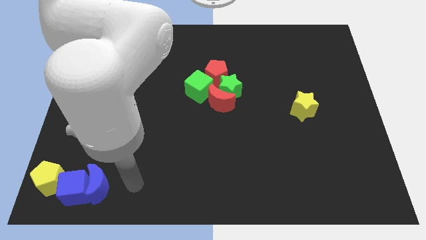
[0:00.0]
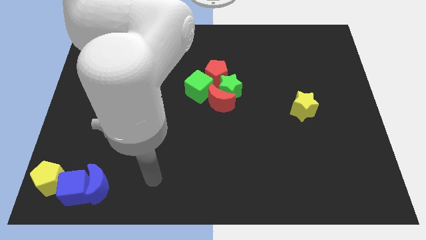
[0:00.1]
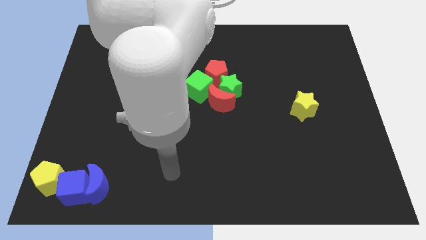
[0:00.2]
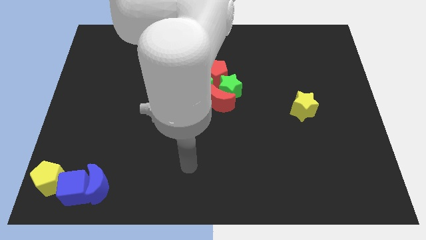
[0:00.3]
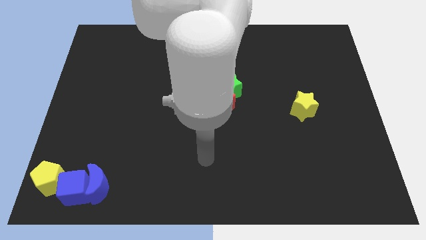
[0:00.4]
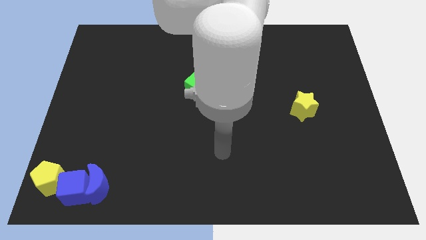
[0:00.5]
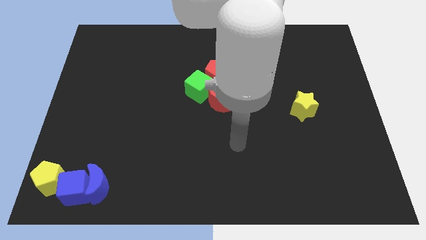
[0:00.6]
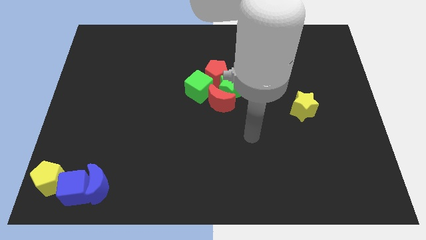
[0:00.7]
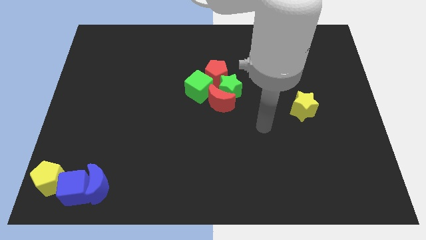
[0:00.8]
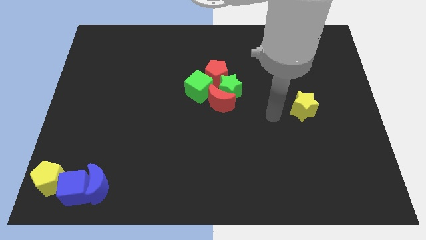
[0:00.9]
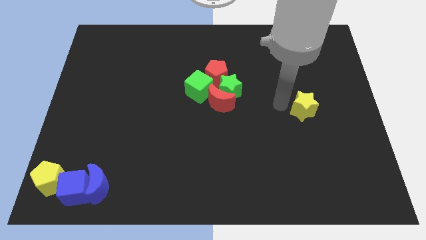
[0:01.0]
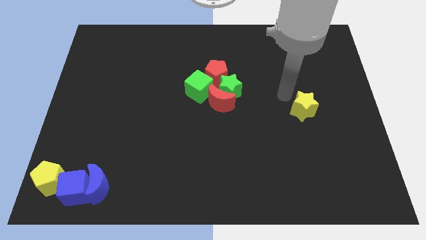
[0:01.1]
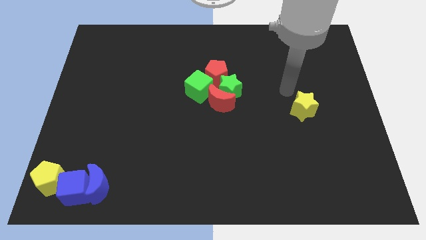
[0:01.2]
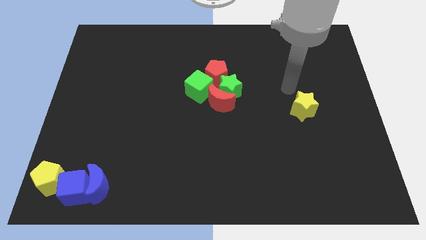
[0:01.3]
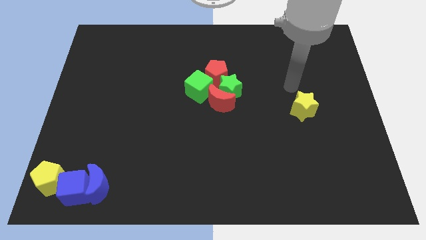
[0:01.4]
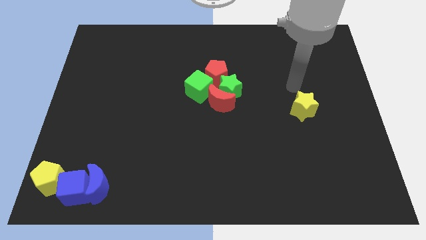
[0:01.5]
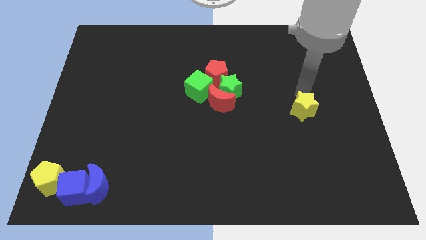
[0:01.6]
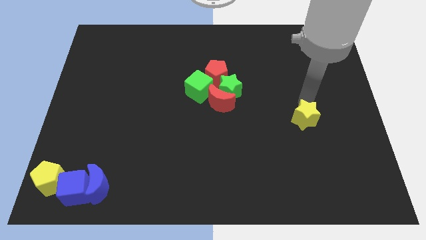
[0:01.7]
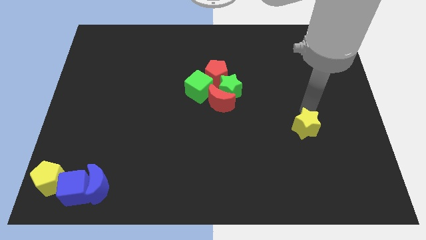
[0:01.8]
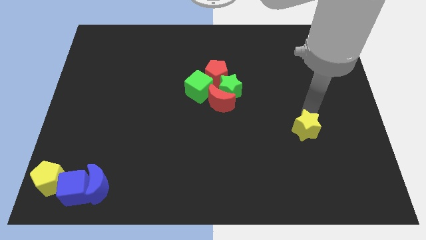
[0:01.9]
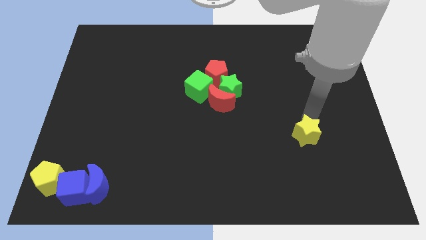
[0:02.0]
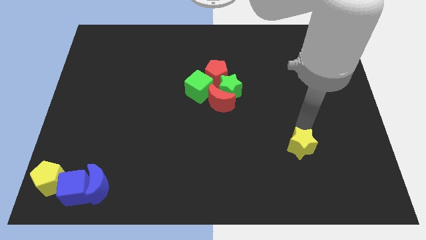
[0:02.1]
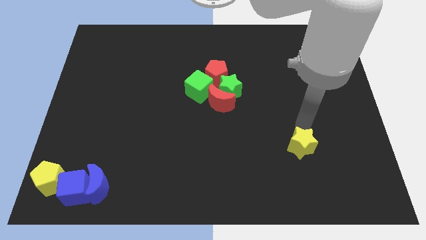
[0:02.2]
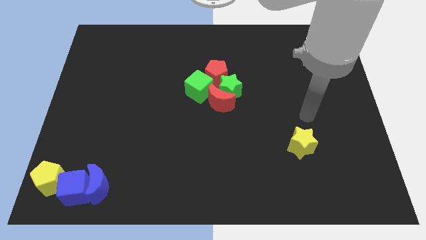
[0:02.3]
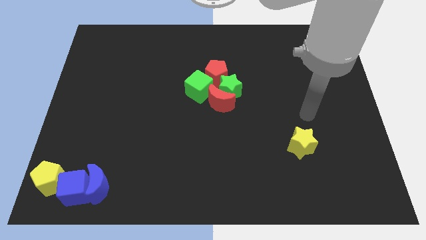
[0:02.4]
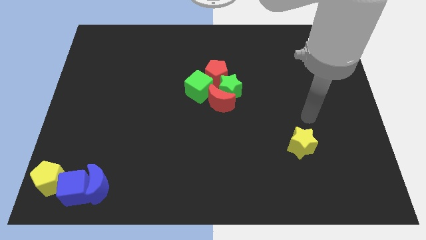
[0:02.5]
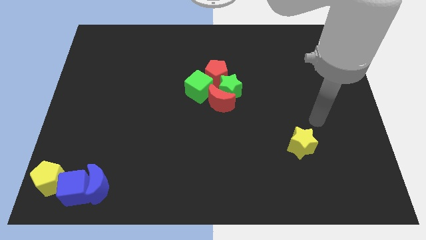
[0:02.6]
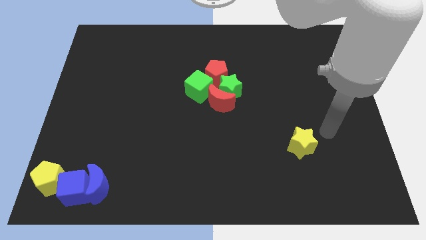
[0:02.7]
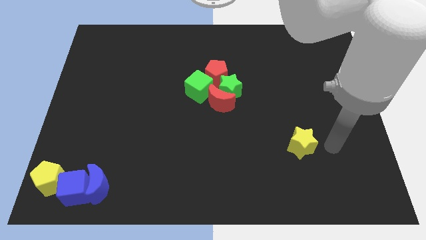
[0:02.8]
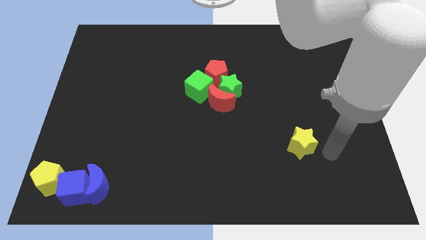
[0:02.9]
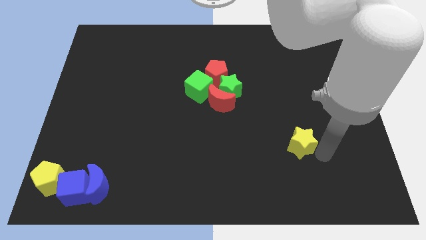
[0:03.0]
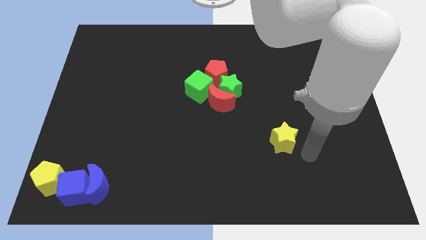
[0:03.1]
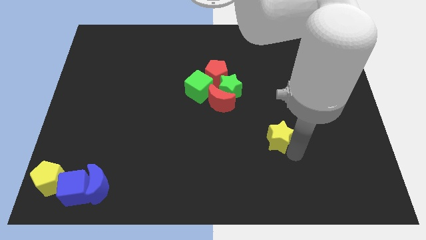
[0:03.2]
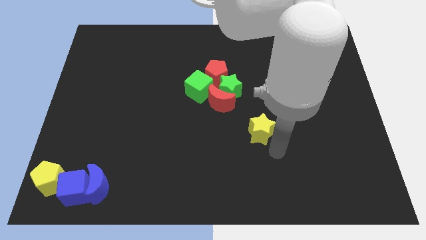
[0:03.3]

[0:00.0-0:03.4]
move the yellow star the bottom right of the red crescent

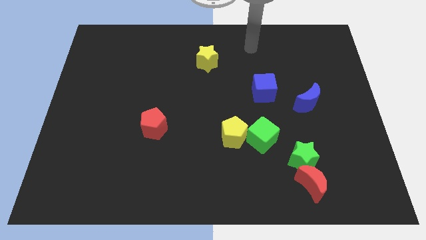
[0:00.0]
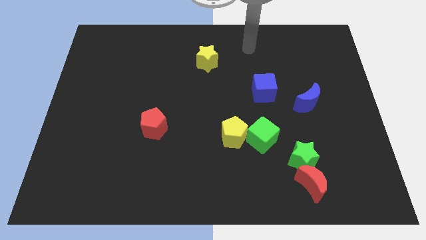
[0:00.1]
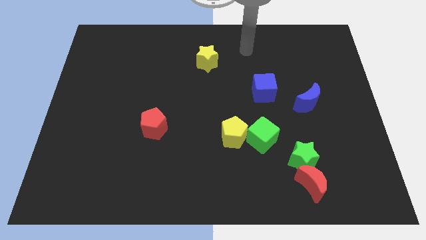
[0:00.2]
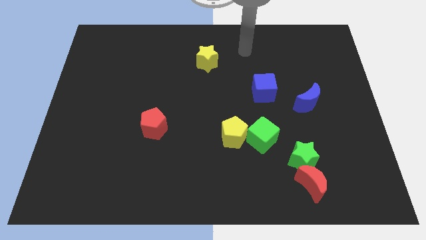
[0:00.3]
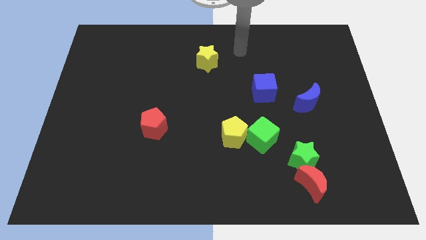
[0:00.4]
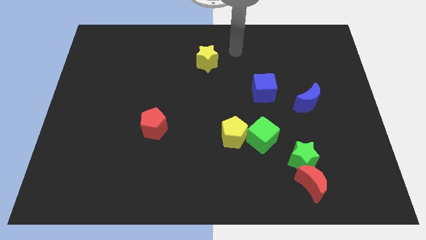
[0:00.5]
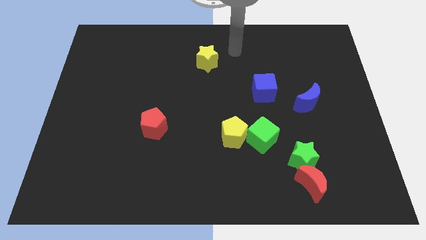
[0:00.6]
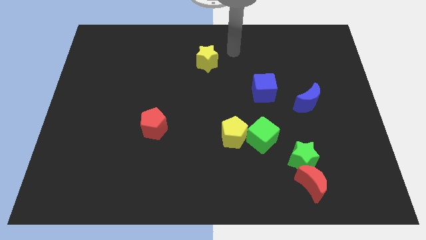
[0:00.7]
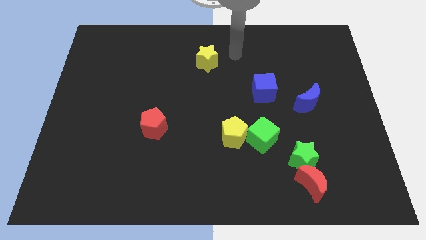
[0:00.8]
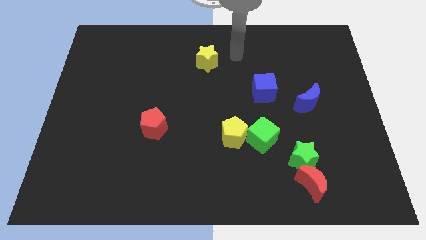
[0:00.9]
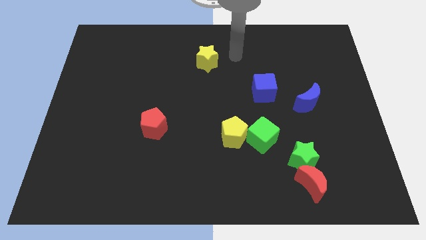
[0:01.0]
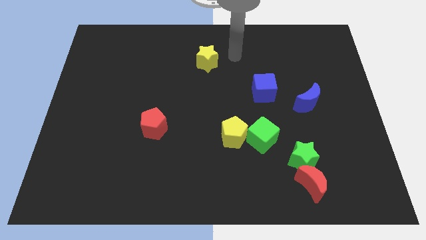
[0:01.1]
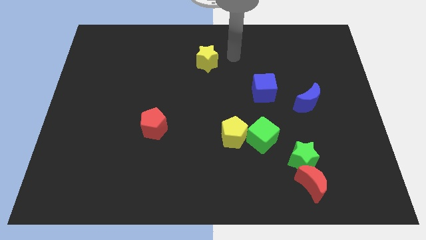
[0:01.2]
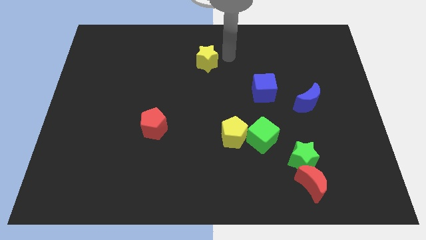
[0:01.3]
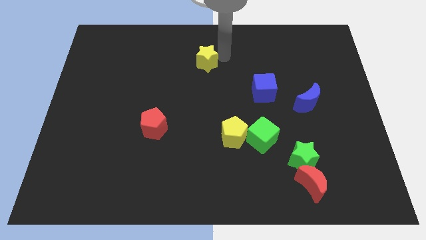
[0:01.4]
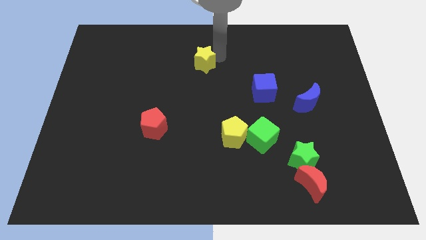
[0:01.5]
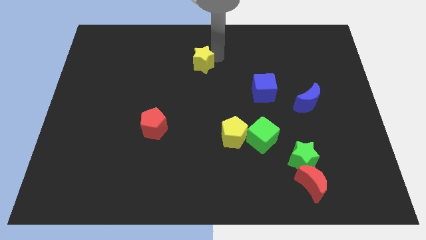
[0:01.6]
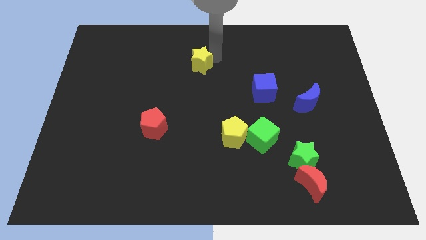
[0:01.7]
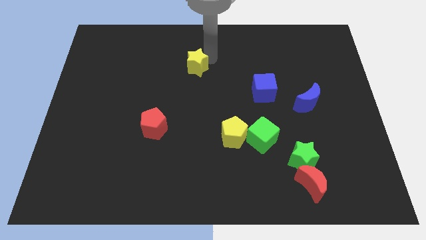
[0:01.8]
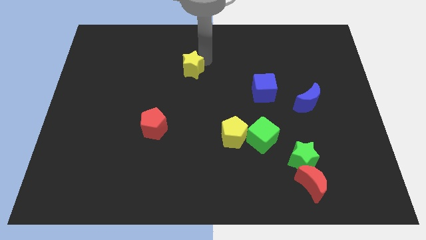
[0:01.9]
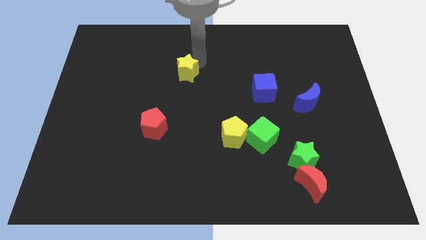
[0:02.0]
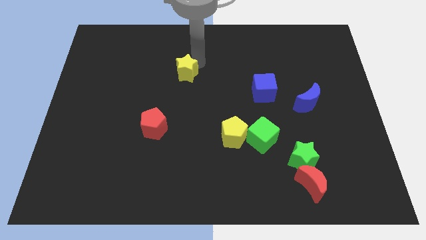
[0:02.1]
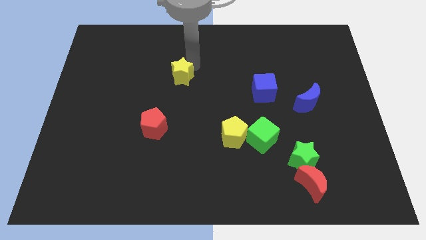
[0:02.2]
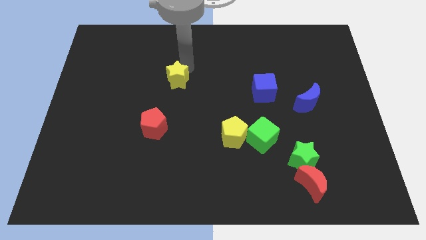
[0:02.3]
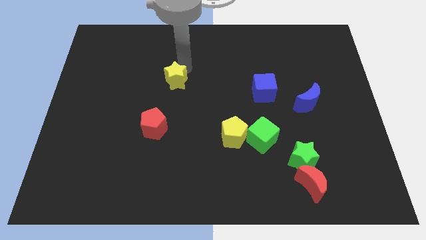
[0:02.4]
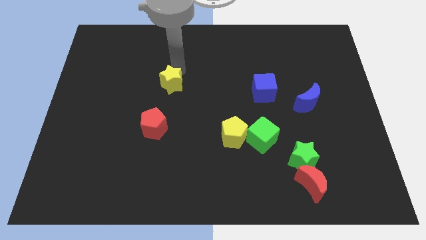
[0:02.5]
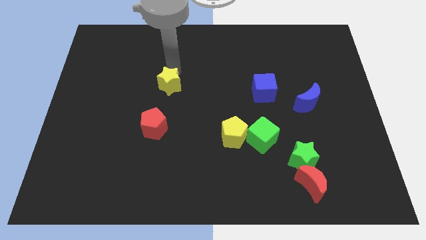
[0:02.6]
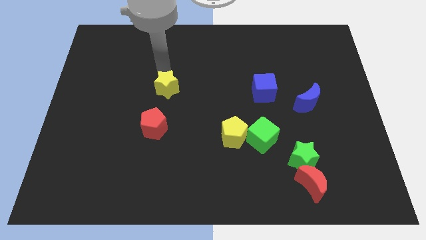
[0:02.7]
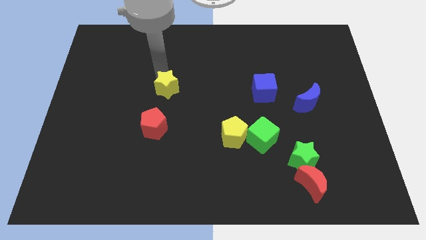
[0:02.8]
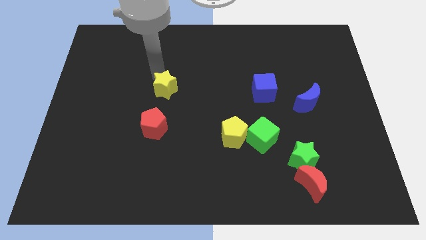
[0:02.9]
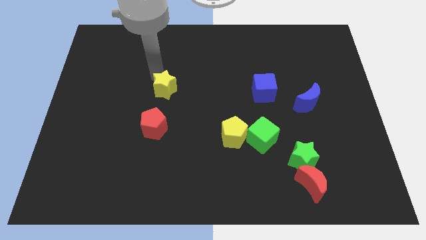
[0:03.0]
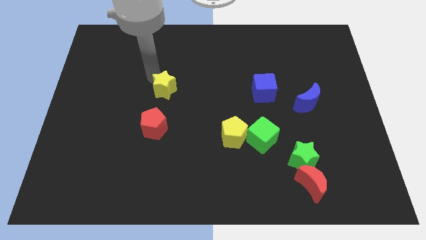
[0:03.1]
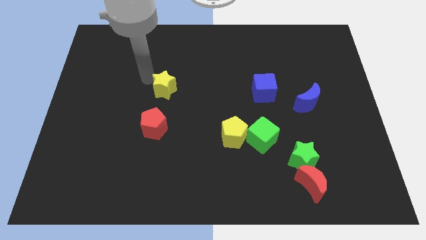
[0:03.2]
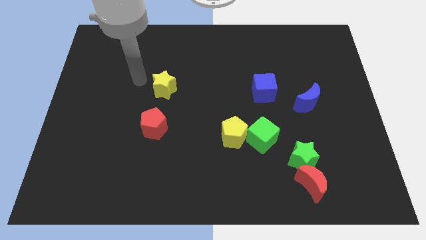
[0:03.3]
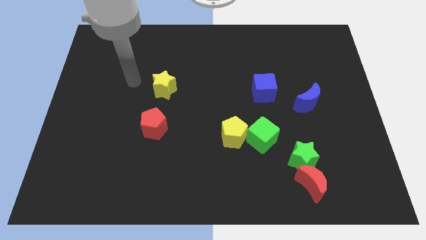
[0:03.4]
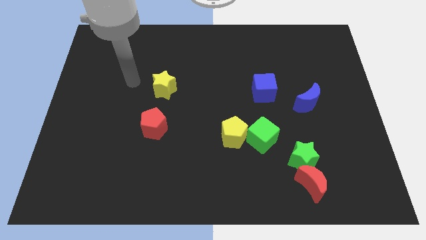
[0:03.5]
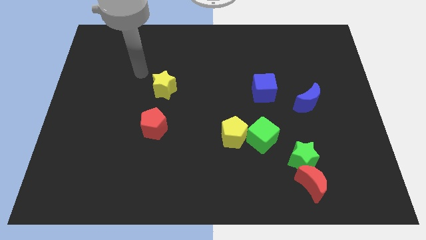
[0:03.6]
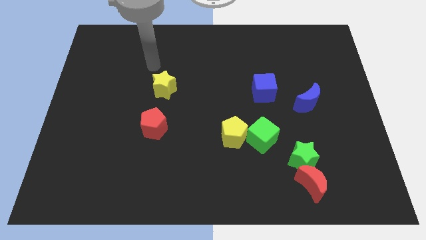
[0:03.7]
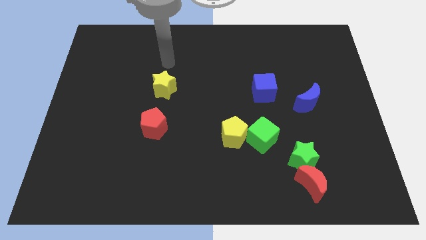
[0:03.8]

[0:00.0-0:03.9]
place the yellow star above the red pentagon

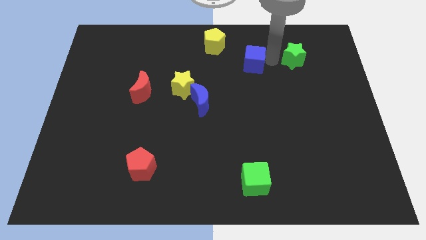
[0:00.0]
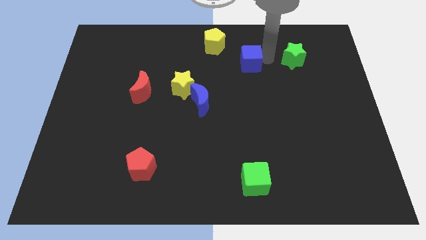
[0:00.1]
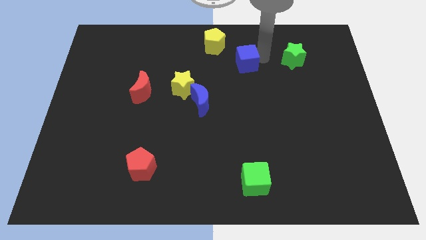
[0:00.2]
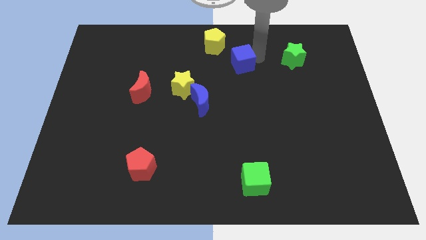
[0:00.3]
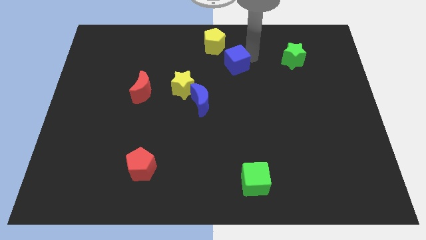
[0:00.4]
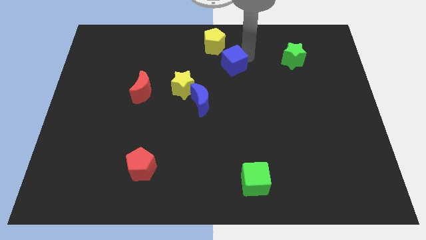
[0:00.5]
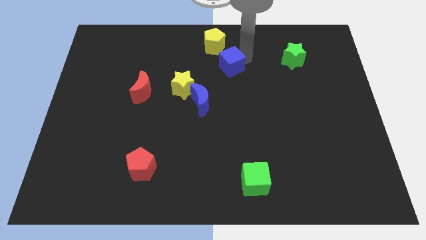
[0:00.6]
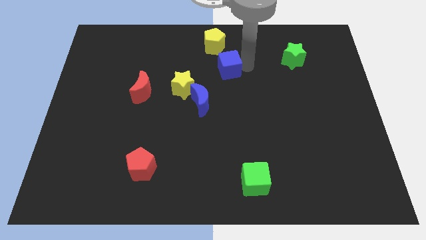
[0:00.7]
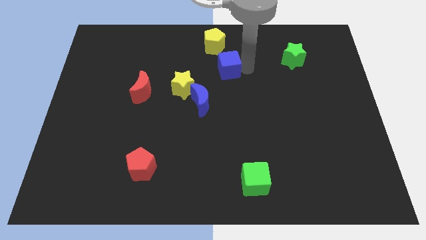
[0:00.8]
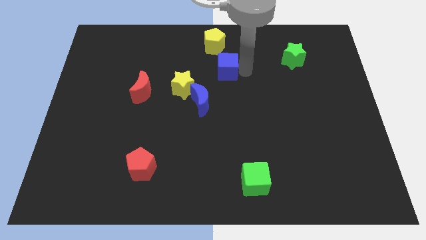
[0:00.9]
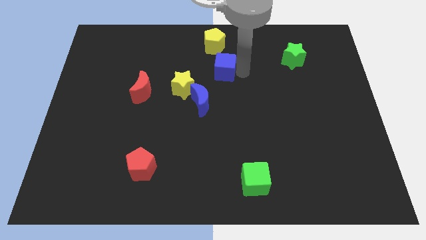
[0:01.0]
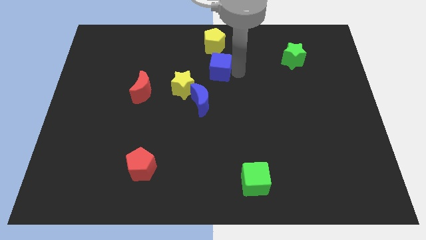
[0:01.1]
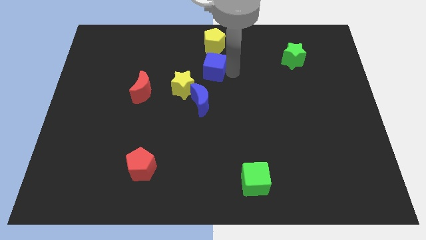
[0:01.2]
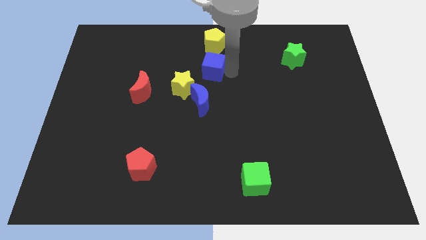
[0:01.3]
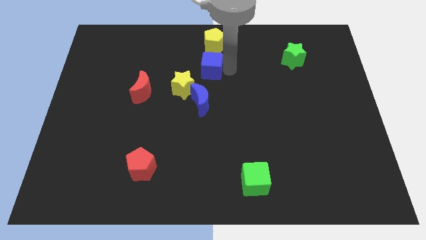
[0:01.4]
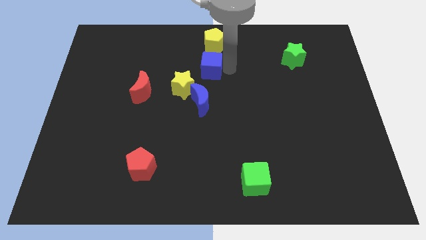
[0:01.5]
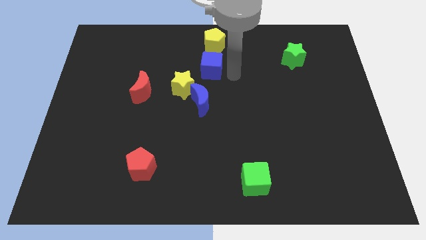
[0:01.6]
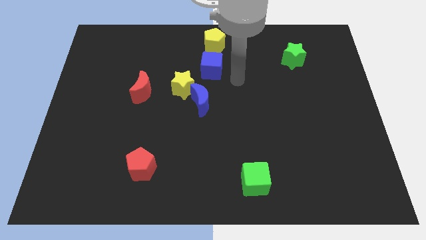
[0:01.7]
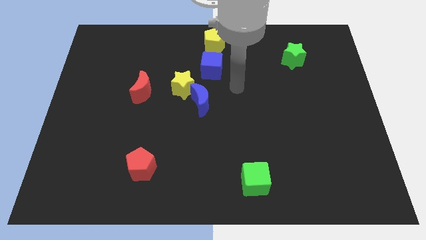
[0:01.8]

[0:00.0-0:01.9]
place the blue cube below the yeloow pentagon
